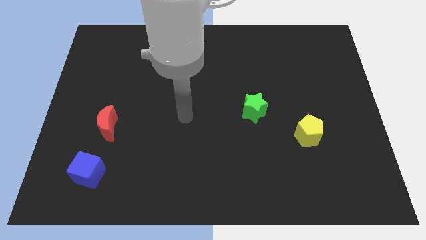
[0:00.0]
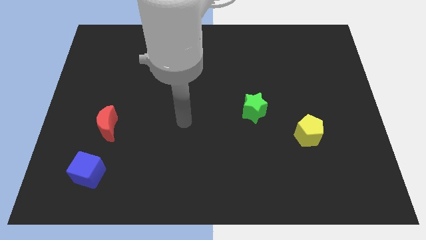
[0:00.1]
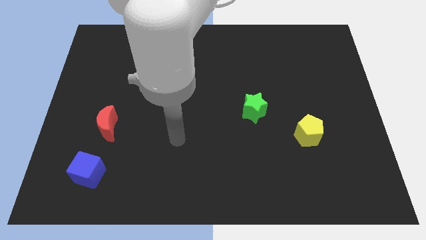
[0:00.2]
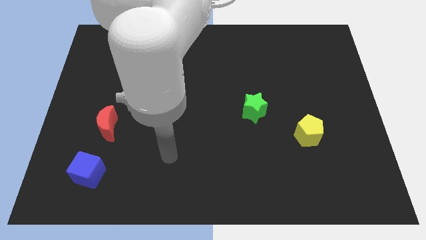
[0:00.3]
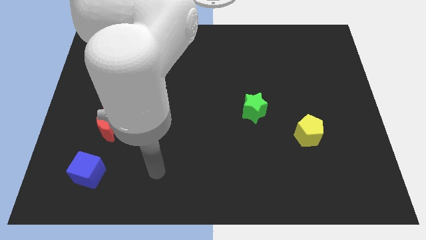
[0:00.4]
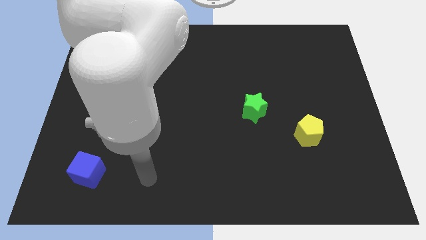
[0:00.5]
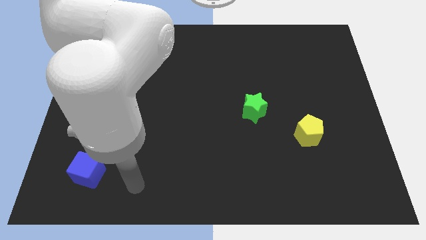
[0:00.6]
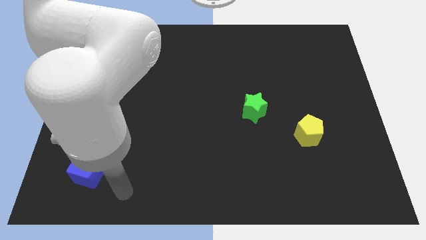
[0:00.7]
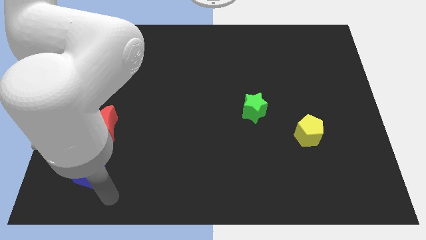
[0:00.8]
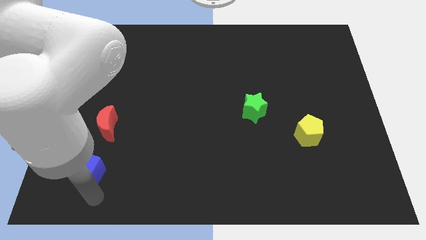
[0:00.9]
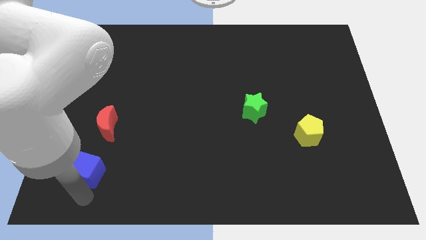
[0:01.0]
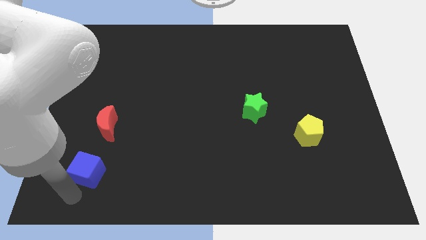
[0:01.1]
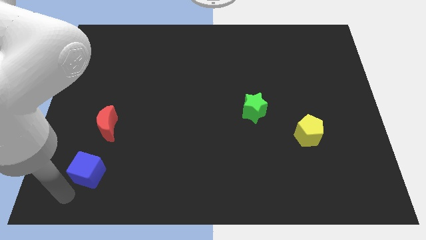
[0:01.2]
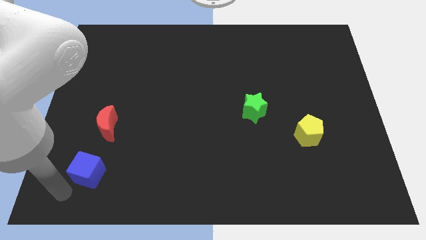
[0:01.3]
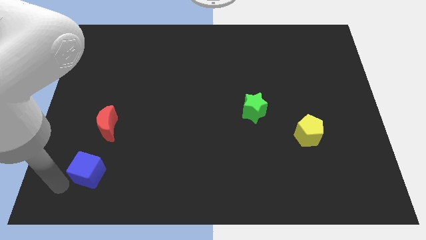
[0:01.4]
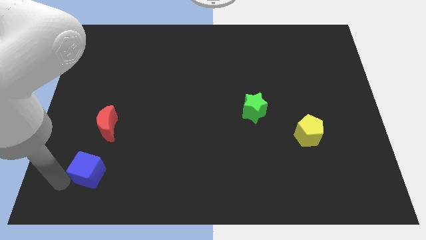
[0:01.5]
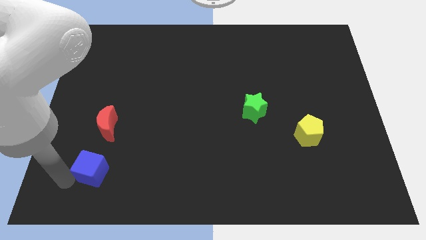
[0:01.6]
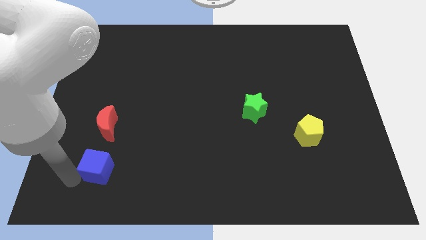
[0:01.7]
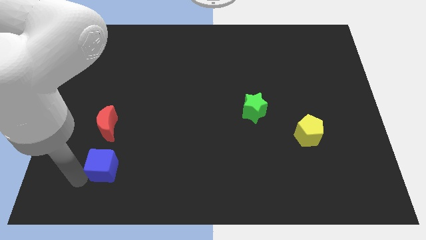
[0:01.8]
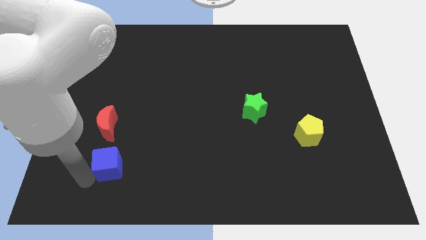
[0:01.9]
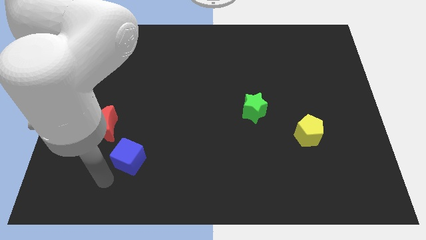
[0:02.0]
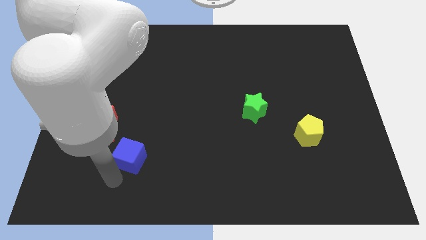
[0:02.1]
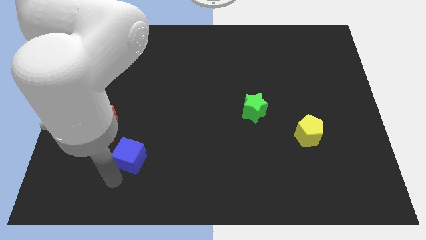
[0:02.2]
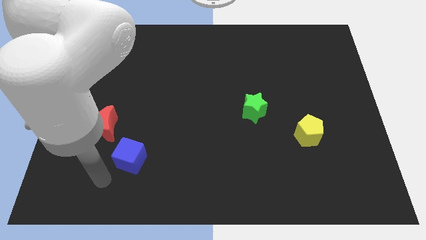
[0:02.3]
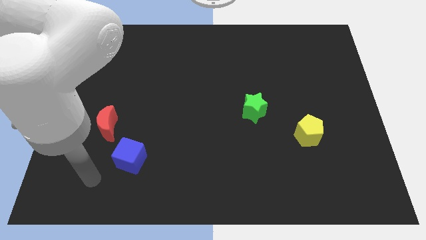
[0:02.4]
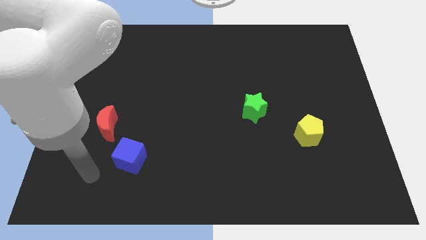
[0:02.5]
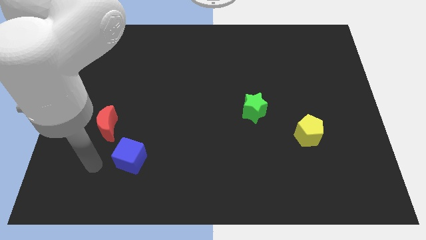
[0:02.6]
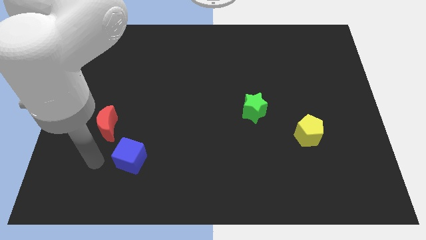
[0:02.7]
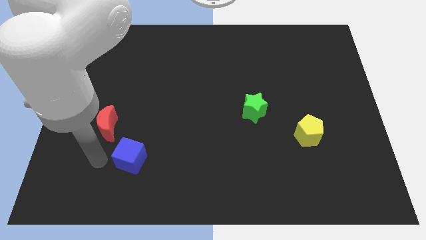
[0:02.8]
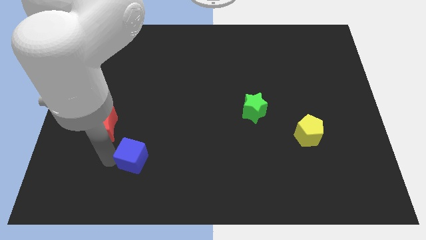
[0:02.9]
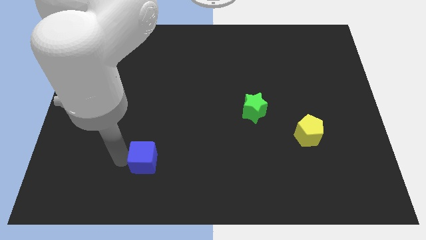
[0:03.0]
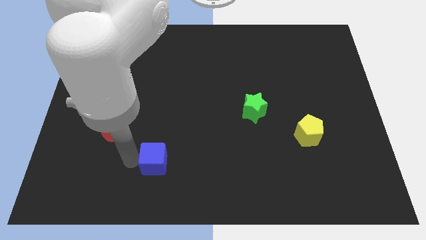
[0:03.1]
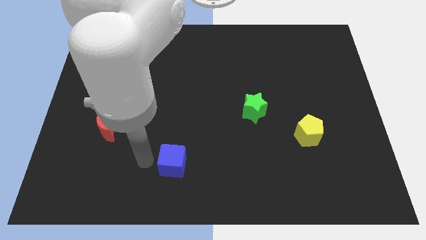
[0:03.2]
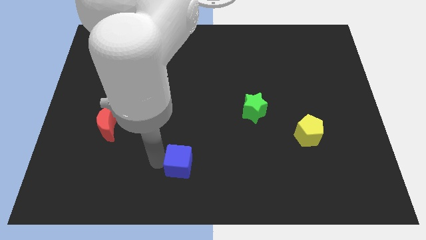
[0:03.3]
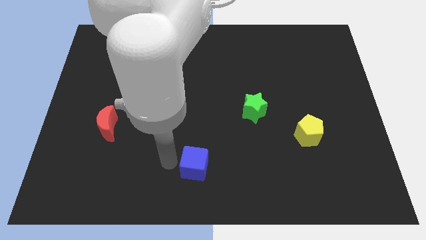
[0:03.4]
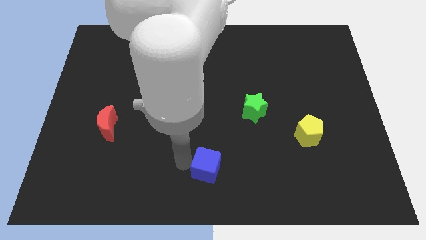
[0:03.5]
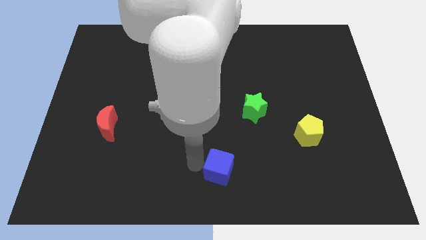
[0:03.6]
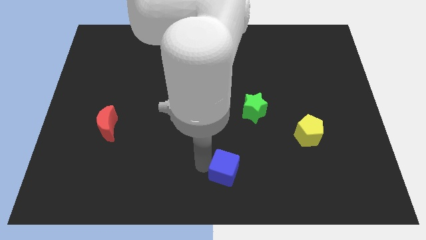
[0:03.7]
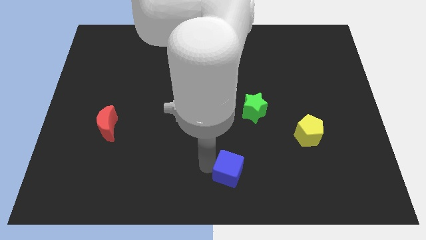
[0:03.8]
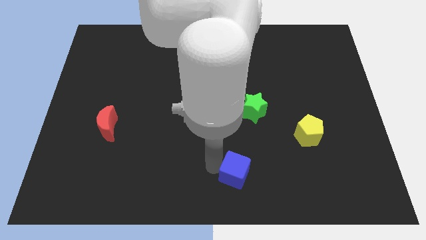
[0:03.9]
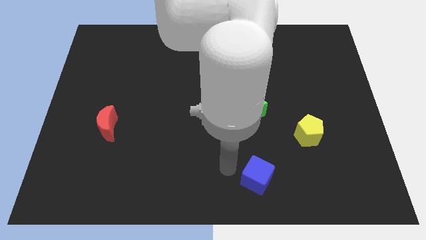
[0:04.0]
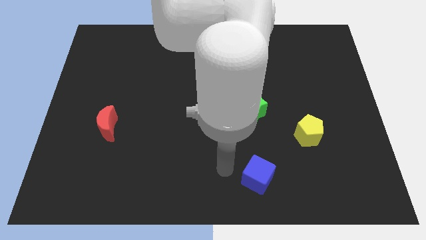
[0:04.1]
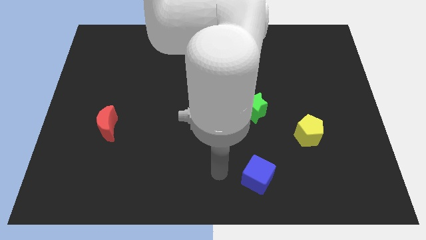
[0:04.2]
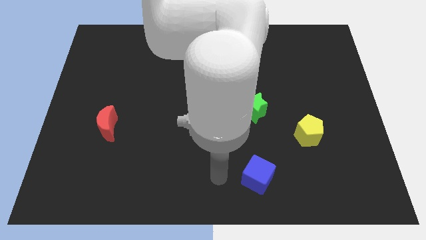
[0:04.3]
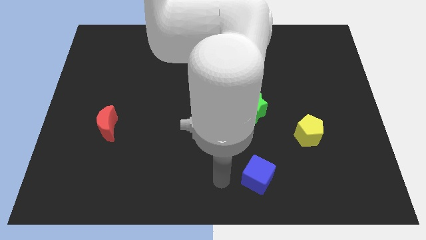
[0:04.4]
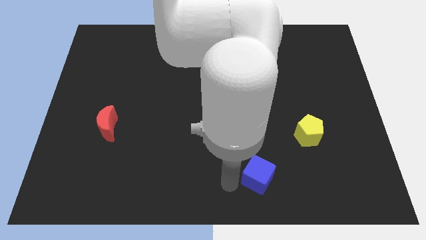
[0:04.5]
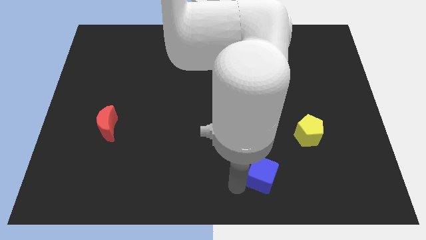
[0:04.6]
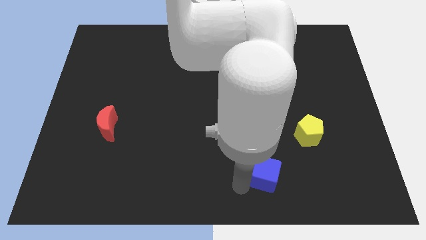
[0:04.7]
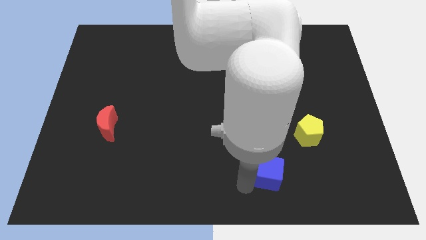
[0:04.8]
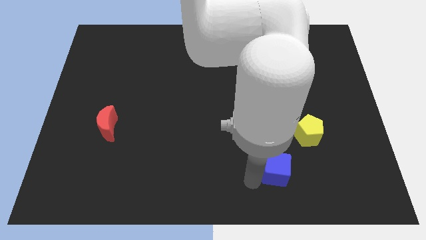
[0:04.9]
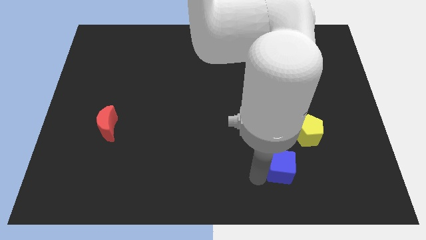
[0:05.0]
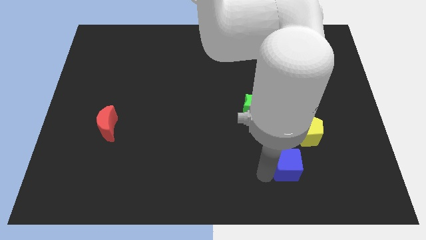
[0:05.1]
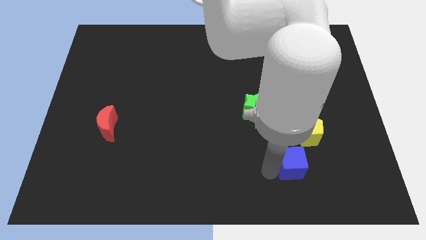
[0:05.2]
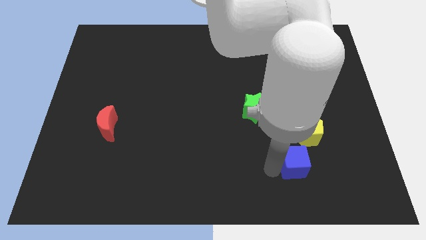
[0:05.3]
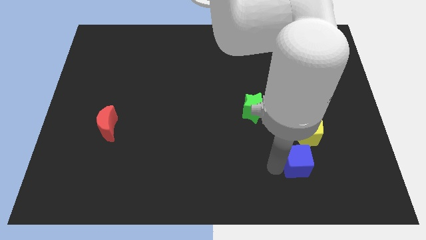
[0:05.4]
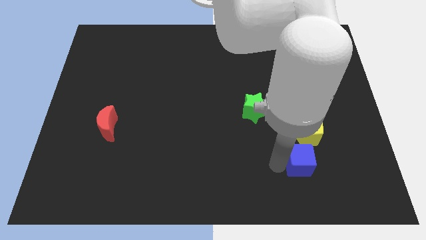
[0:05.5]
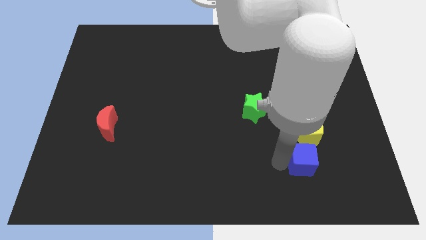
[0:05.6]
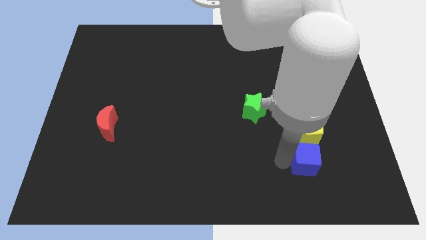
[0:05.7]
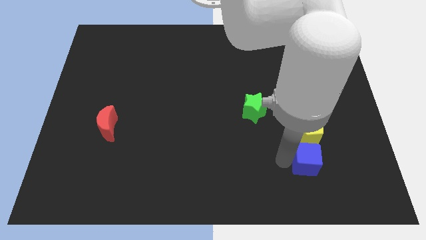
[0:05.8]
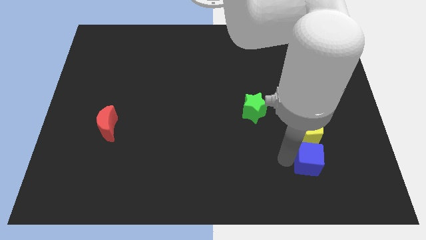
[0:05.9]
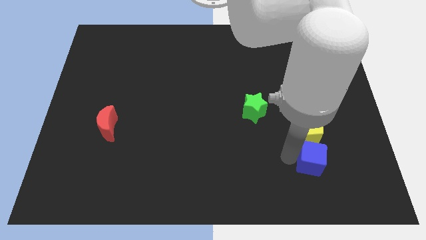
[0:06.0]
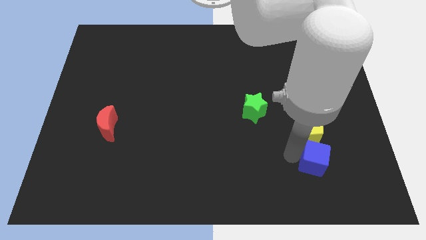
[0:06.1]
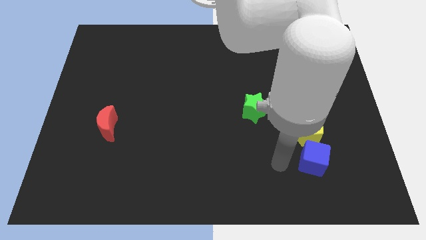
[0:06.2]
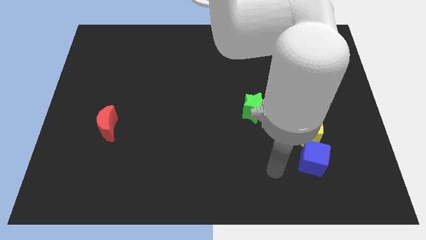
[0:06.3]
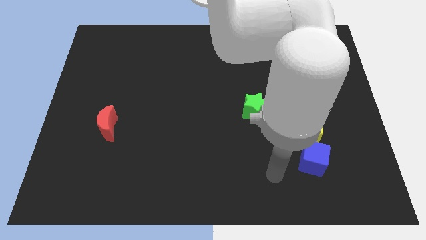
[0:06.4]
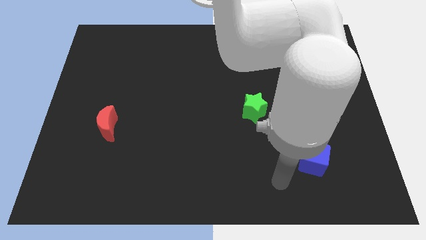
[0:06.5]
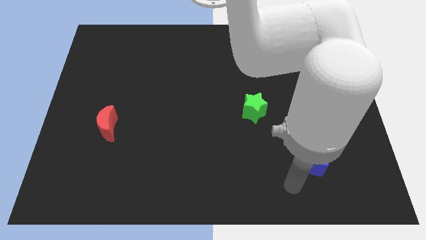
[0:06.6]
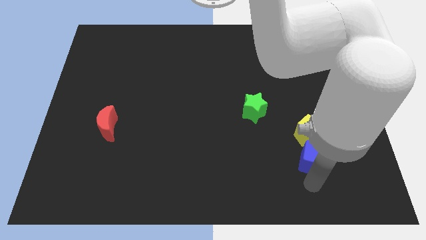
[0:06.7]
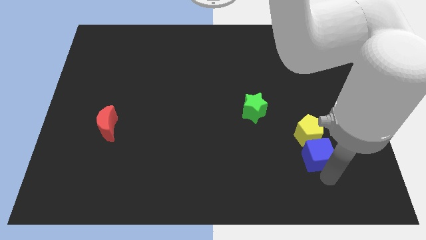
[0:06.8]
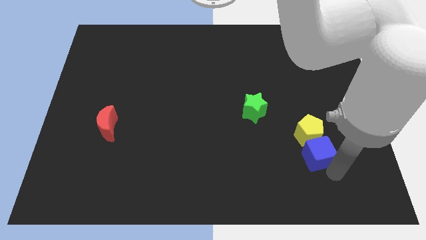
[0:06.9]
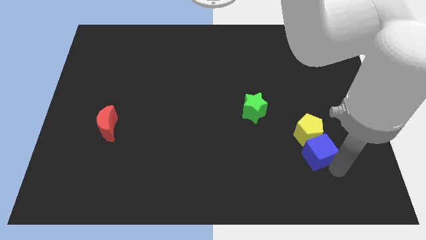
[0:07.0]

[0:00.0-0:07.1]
push the blue block next to the yellow block

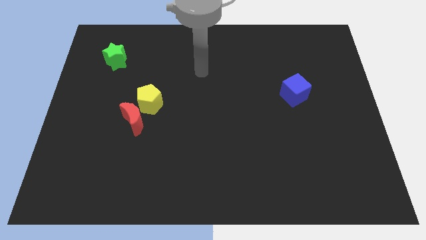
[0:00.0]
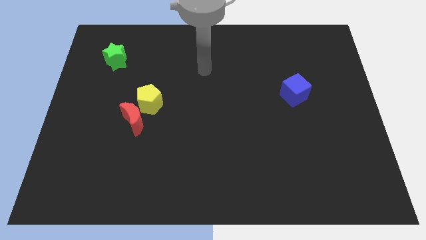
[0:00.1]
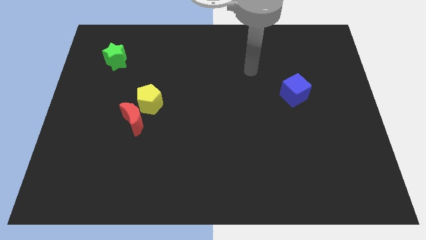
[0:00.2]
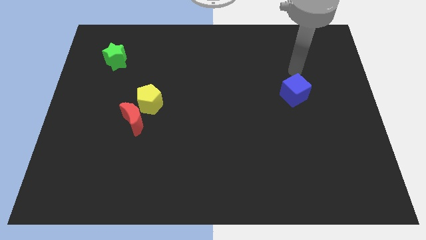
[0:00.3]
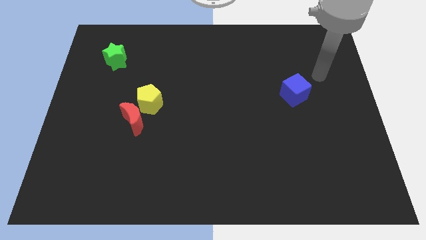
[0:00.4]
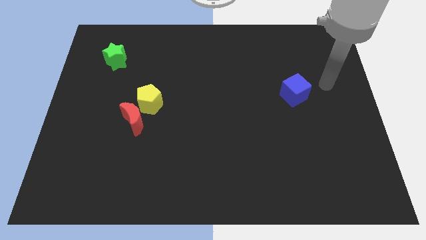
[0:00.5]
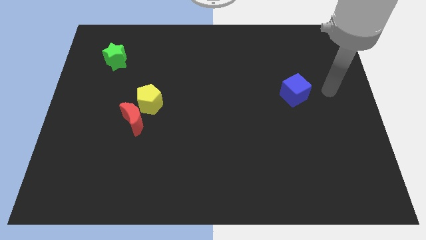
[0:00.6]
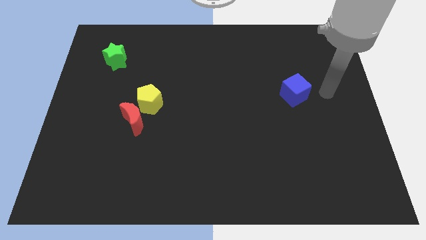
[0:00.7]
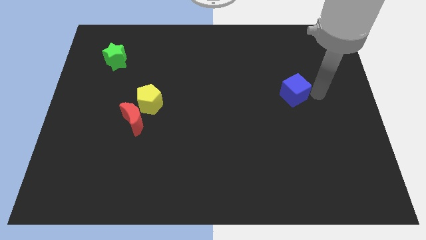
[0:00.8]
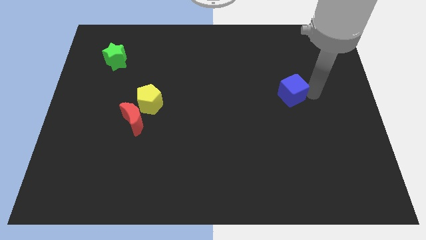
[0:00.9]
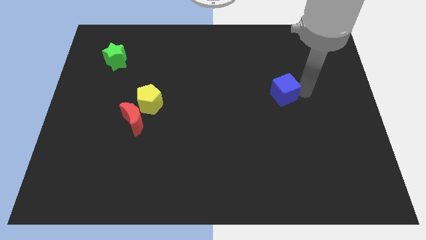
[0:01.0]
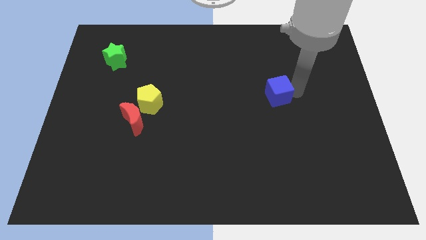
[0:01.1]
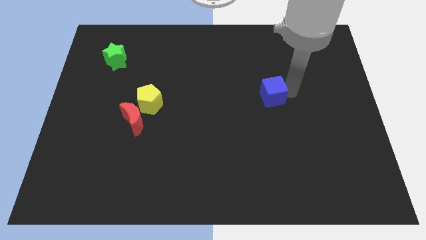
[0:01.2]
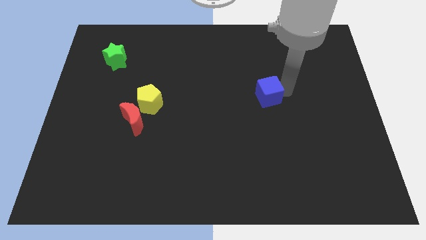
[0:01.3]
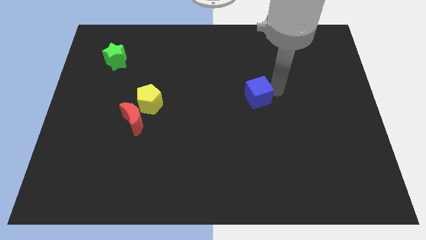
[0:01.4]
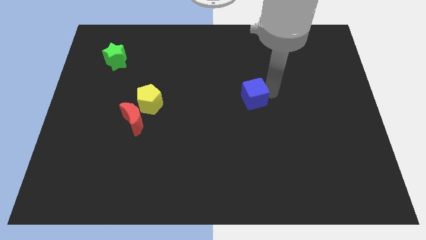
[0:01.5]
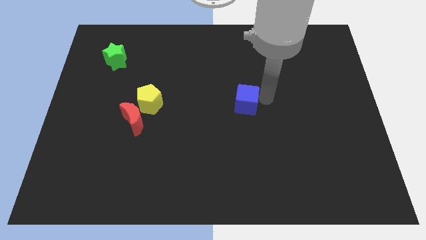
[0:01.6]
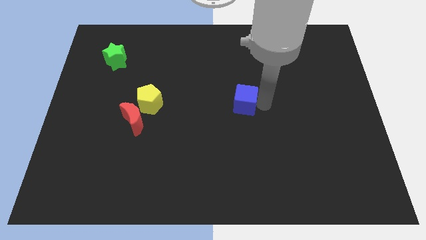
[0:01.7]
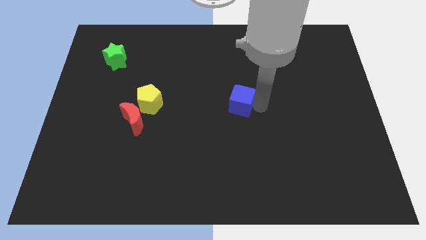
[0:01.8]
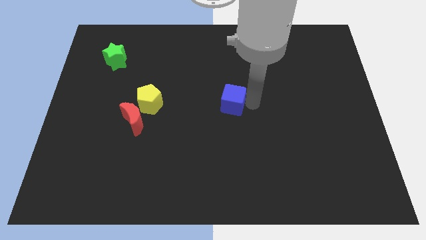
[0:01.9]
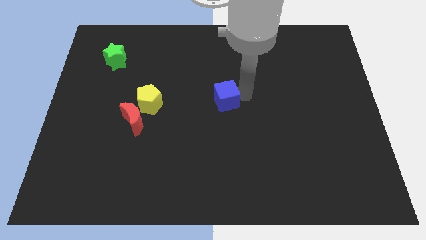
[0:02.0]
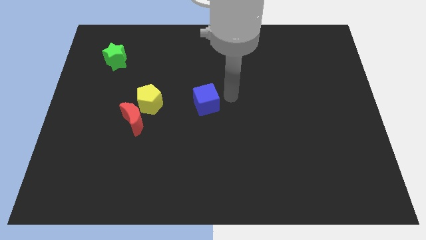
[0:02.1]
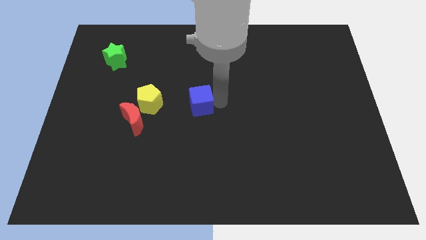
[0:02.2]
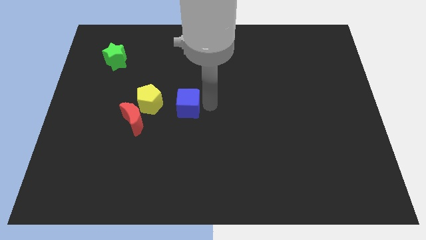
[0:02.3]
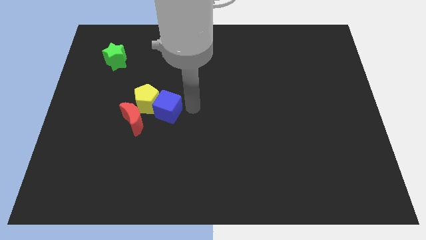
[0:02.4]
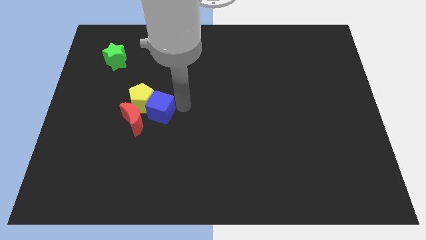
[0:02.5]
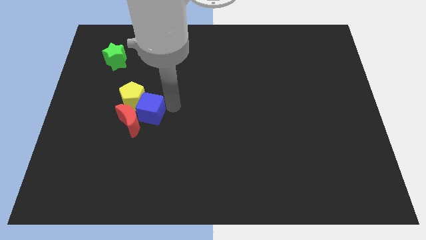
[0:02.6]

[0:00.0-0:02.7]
put the cube close to the yellow block
